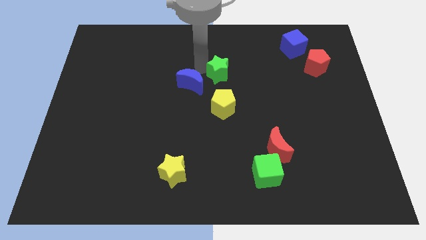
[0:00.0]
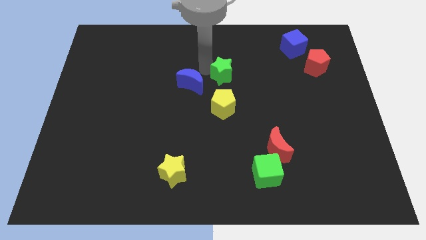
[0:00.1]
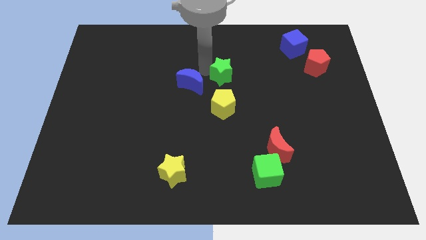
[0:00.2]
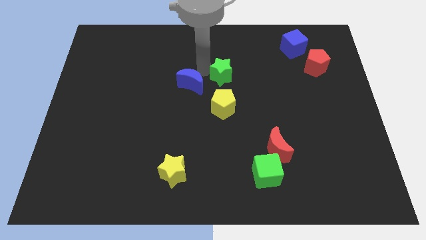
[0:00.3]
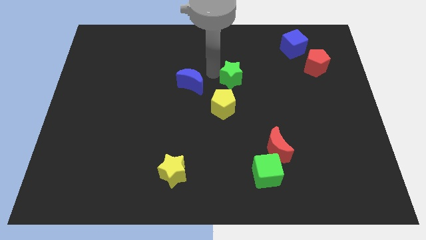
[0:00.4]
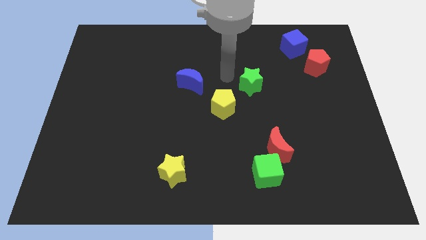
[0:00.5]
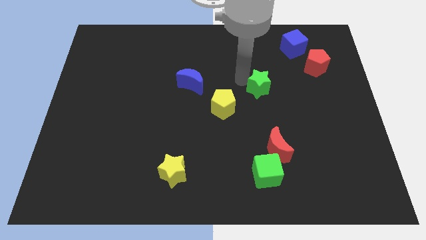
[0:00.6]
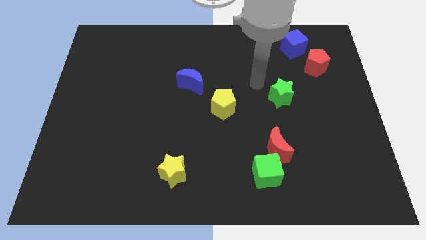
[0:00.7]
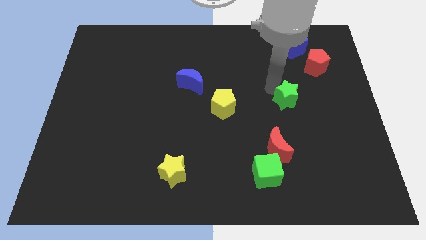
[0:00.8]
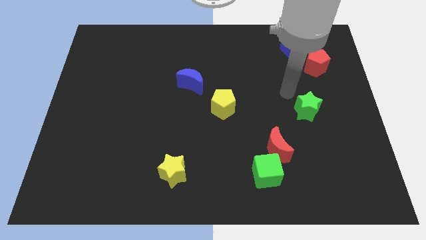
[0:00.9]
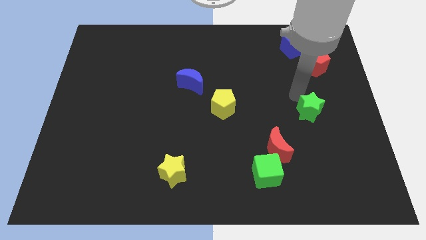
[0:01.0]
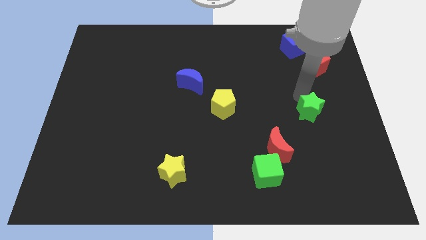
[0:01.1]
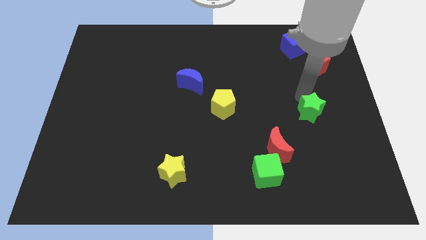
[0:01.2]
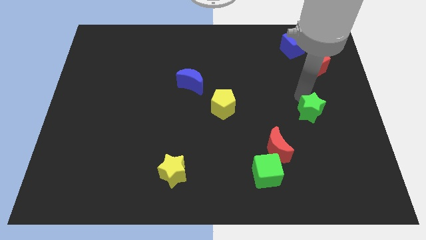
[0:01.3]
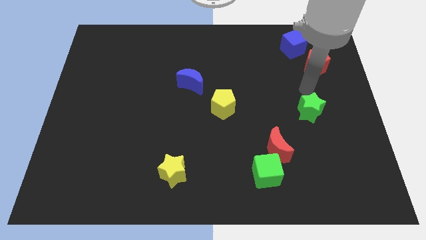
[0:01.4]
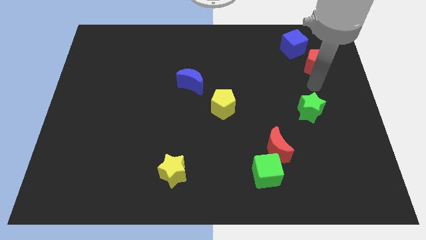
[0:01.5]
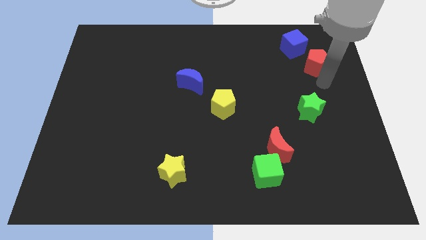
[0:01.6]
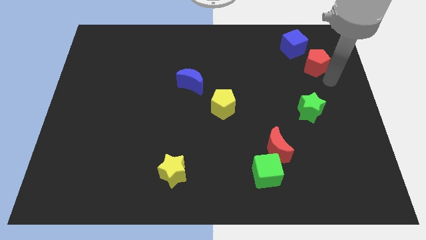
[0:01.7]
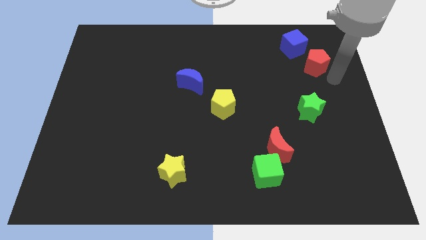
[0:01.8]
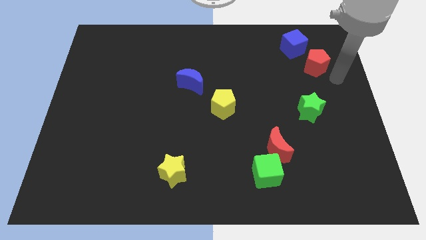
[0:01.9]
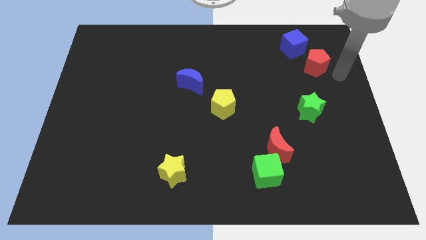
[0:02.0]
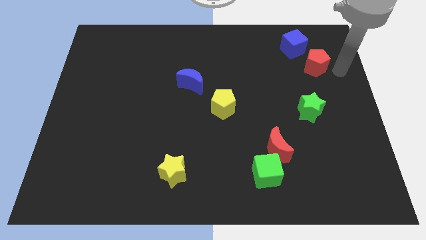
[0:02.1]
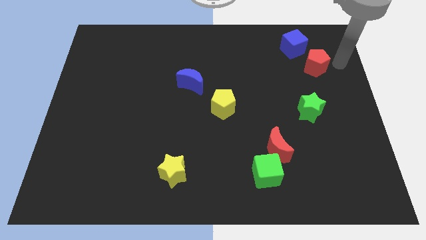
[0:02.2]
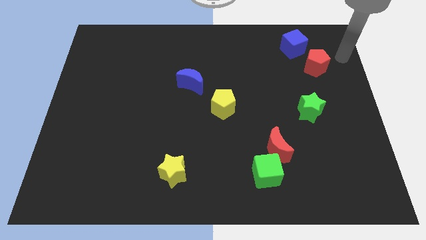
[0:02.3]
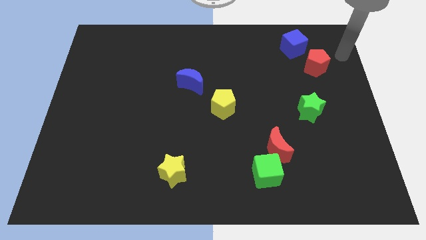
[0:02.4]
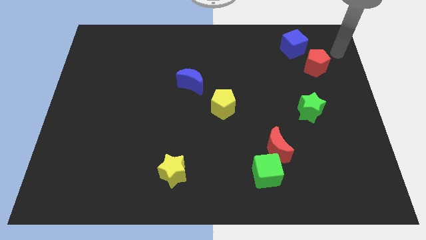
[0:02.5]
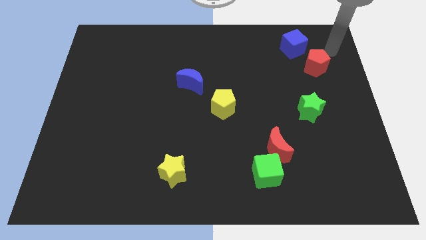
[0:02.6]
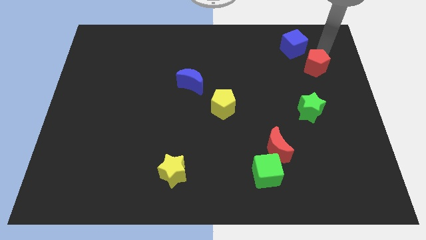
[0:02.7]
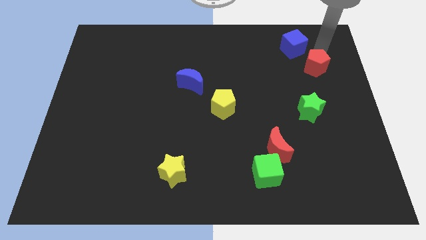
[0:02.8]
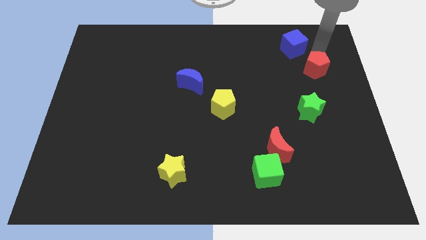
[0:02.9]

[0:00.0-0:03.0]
move green star diagonally

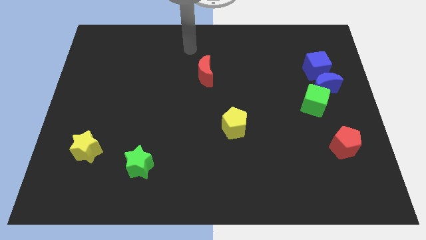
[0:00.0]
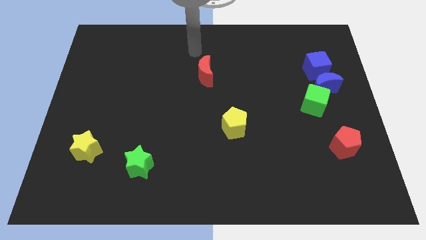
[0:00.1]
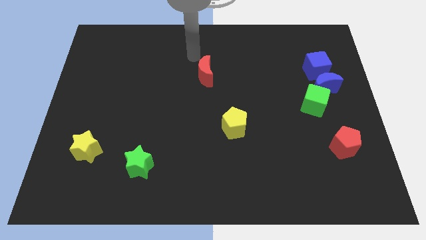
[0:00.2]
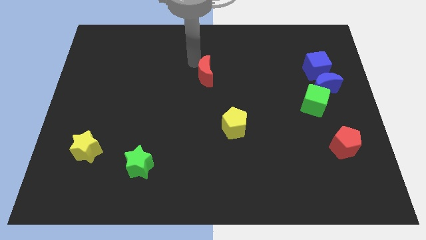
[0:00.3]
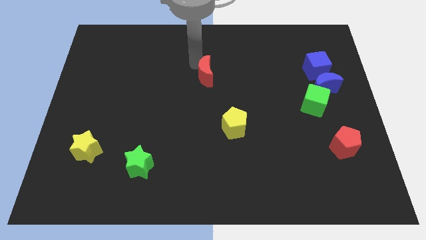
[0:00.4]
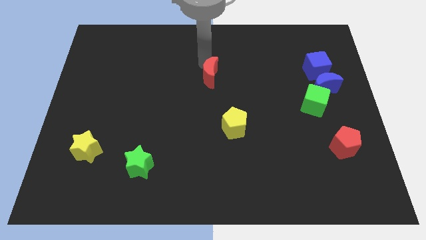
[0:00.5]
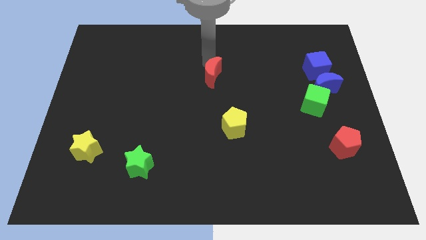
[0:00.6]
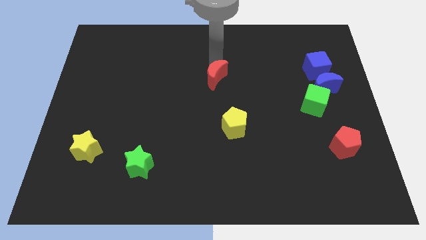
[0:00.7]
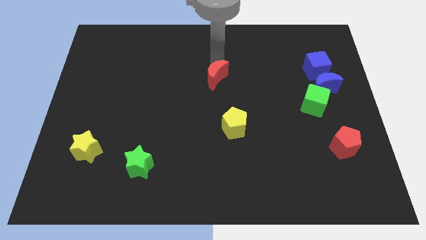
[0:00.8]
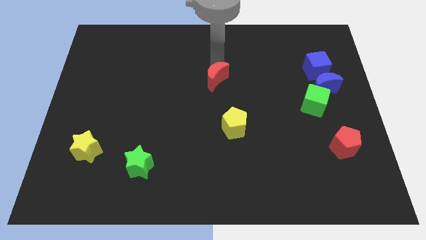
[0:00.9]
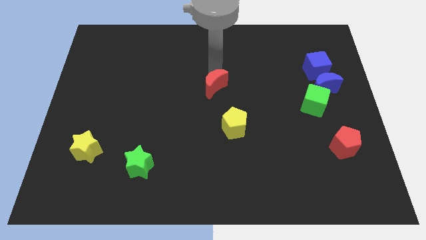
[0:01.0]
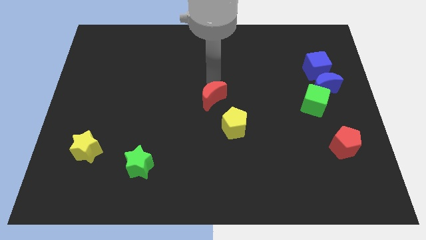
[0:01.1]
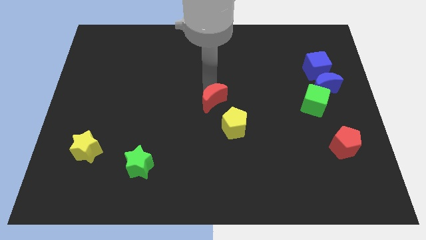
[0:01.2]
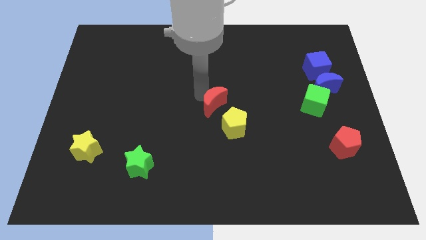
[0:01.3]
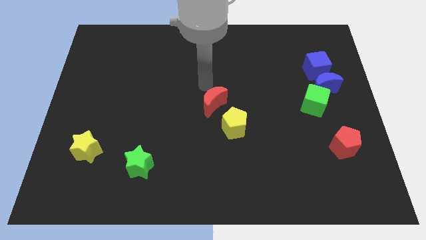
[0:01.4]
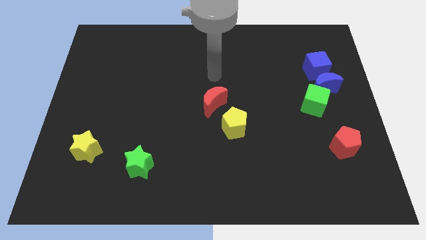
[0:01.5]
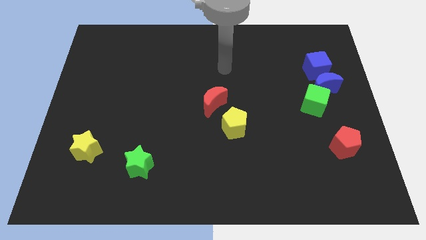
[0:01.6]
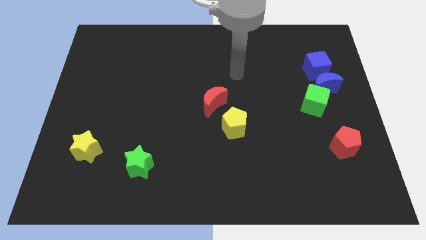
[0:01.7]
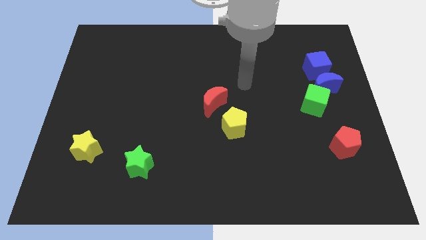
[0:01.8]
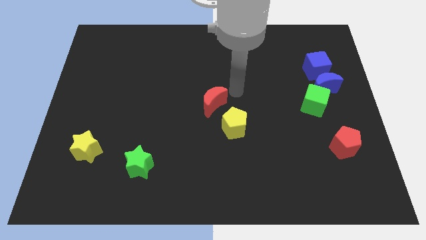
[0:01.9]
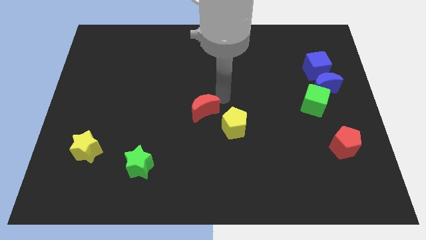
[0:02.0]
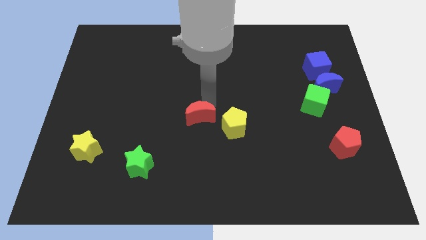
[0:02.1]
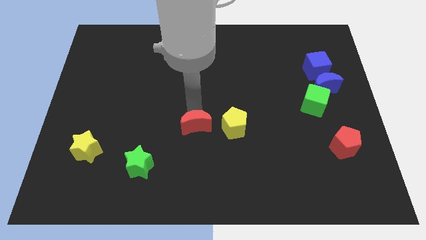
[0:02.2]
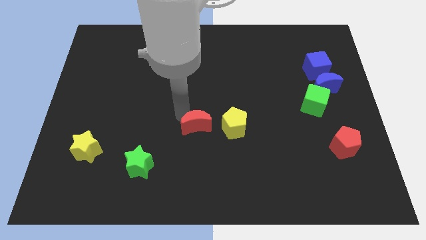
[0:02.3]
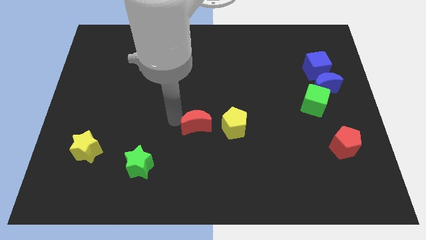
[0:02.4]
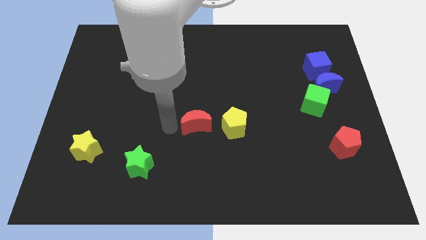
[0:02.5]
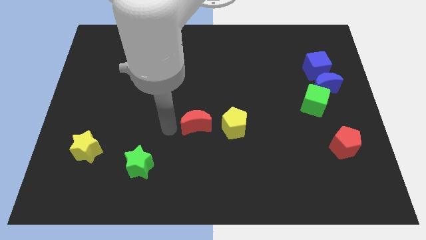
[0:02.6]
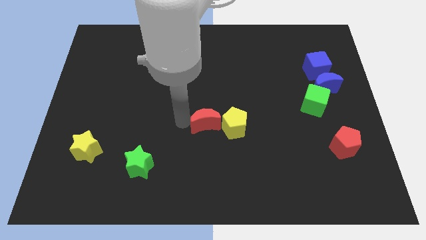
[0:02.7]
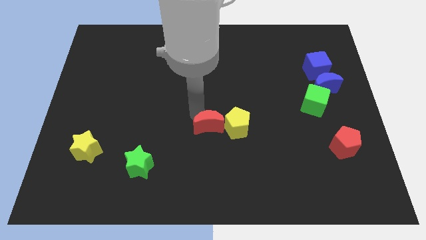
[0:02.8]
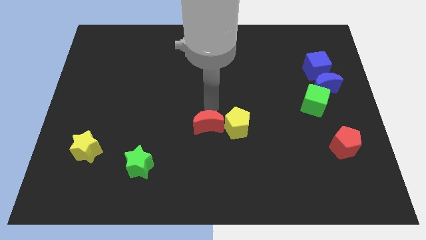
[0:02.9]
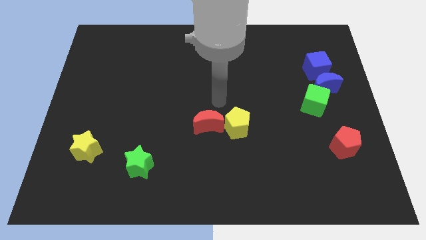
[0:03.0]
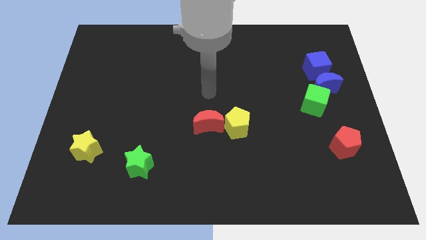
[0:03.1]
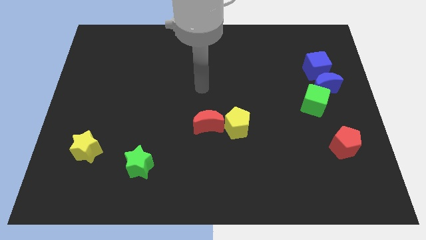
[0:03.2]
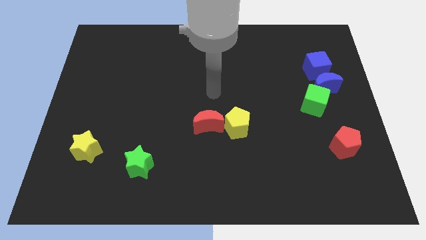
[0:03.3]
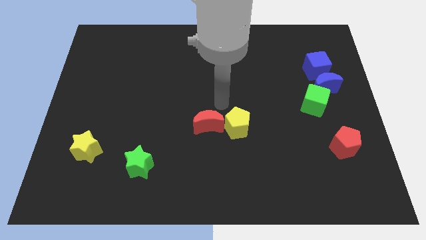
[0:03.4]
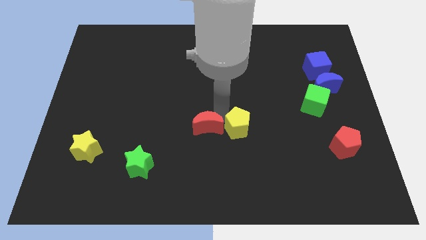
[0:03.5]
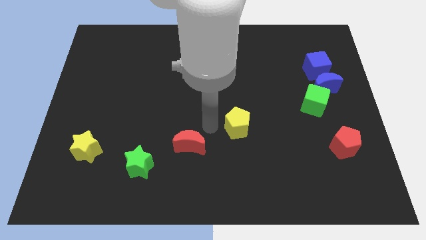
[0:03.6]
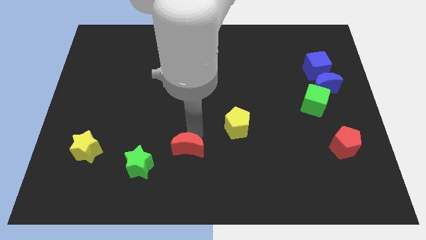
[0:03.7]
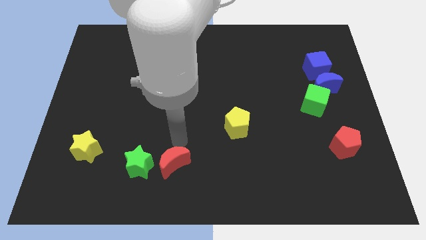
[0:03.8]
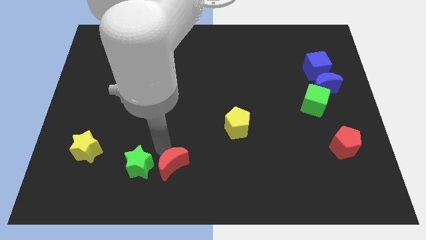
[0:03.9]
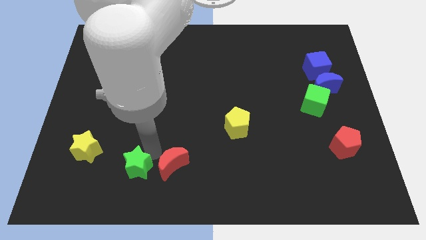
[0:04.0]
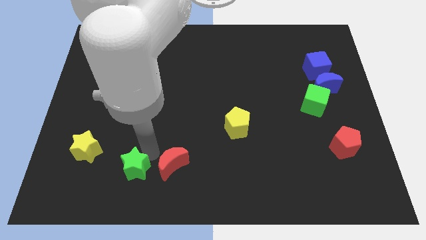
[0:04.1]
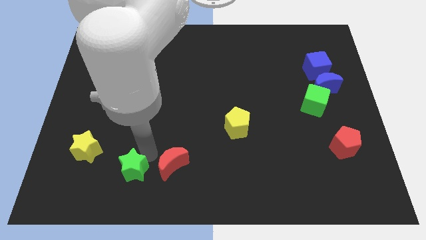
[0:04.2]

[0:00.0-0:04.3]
place the red moon right to the green star

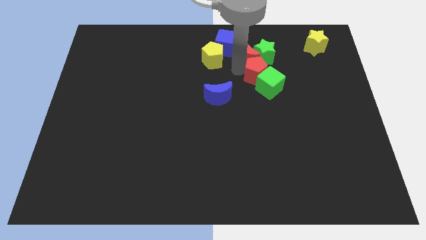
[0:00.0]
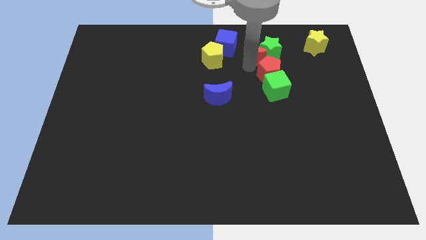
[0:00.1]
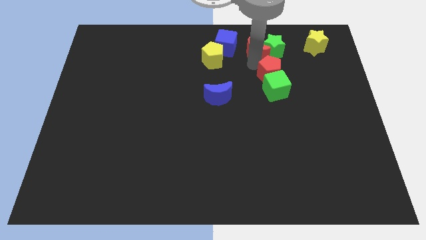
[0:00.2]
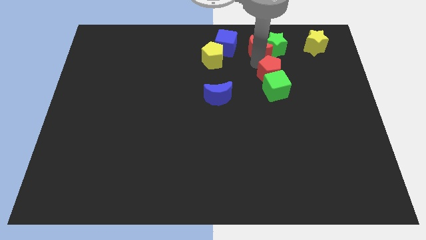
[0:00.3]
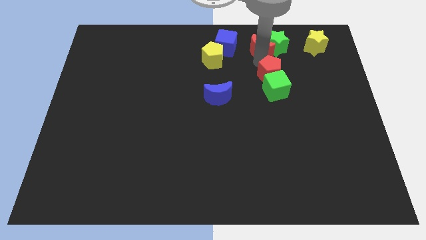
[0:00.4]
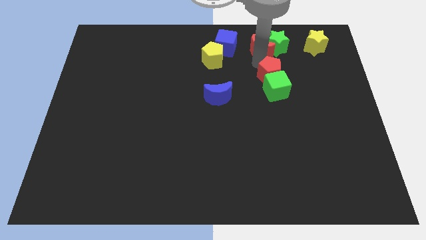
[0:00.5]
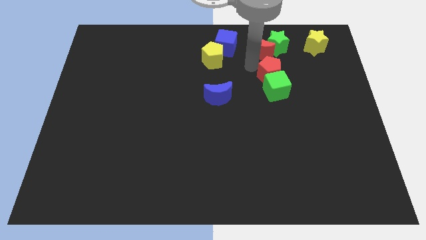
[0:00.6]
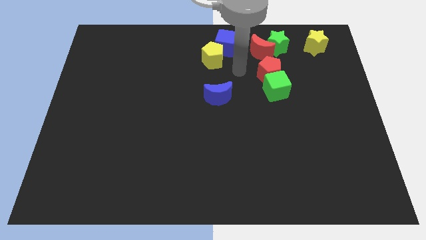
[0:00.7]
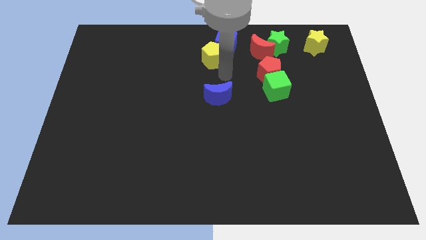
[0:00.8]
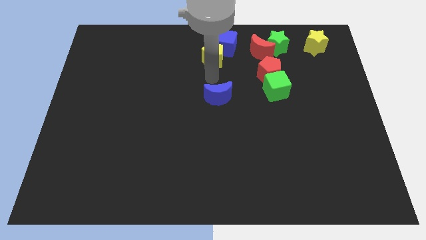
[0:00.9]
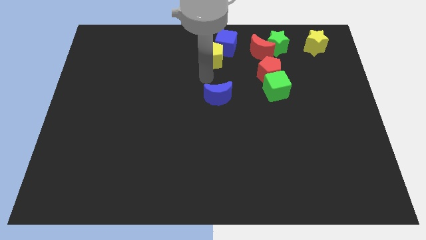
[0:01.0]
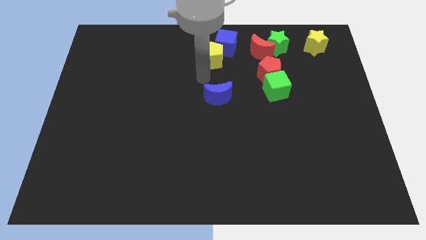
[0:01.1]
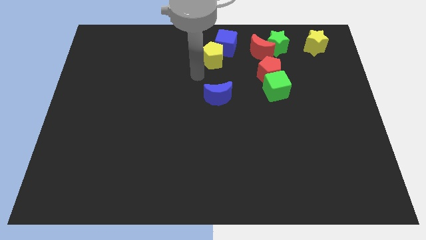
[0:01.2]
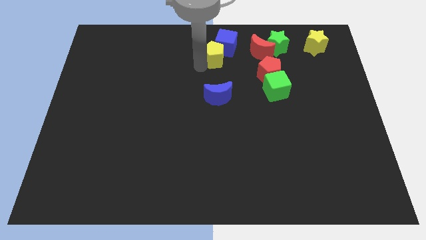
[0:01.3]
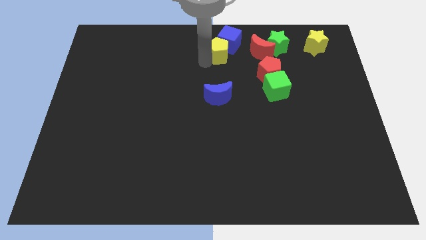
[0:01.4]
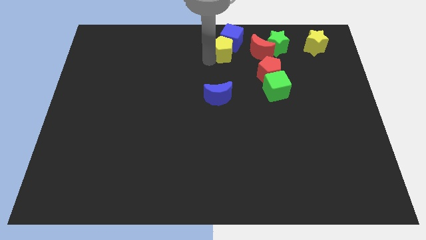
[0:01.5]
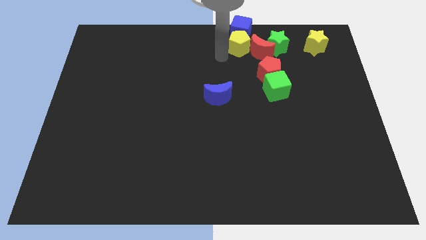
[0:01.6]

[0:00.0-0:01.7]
slide the blue cube yellow pentagon and red moon towards top side
